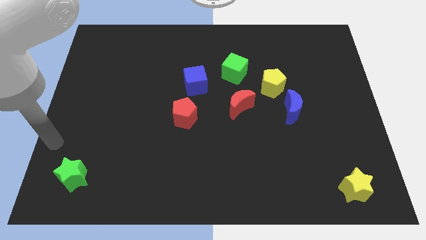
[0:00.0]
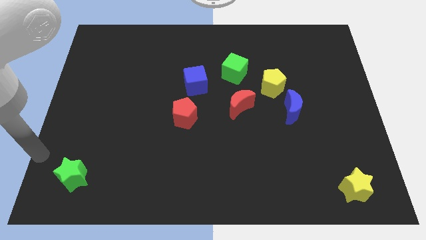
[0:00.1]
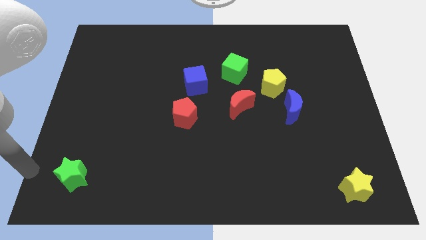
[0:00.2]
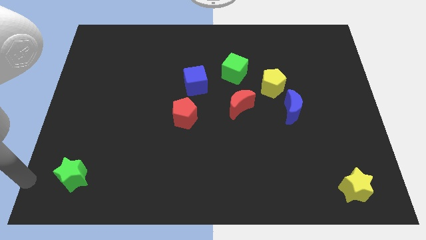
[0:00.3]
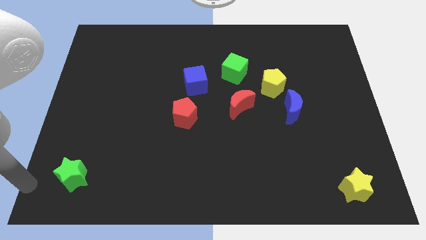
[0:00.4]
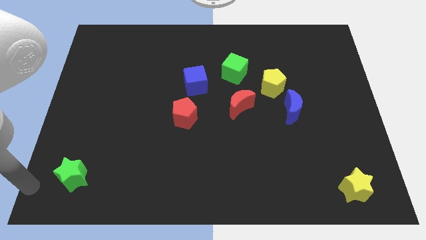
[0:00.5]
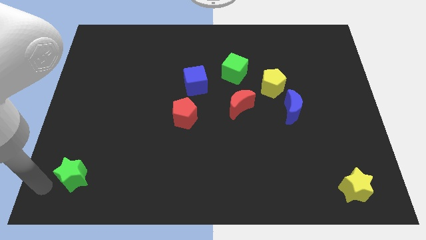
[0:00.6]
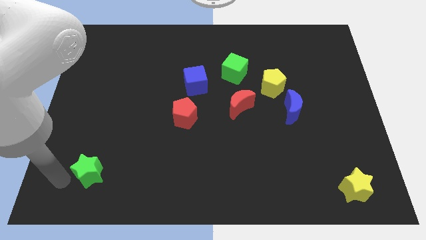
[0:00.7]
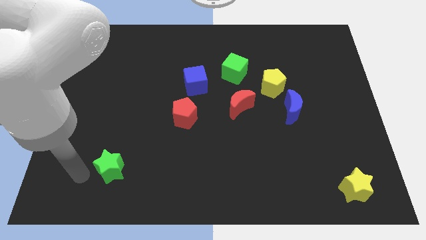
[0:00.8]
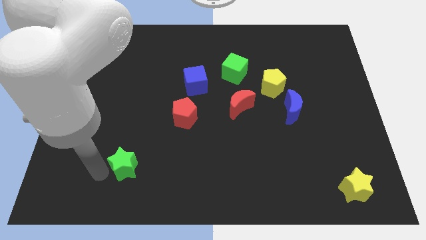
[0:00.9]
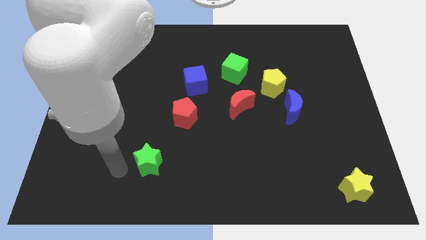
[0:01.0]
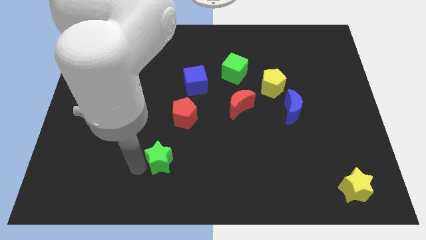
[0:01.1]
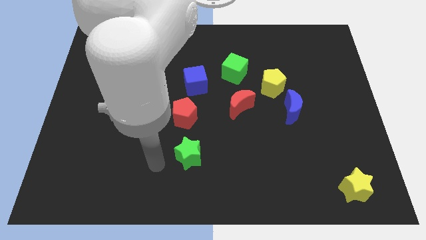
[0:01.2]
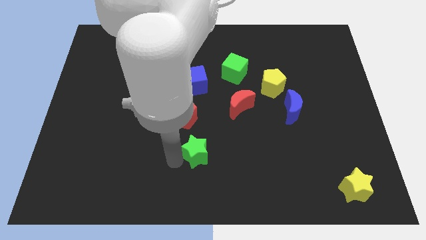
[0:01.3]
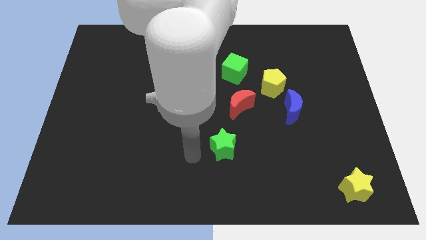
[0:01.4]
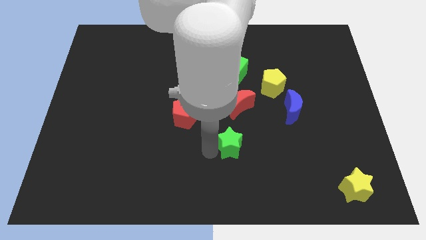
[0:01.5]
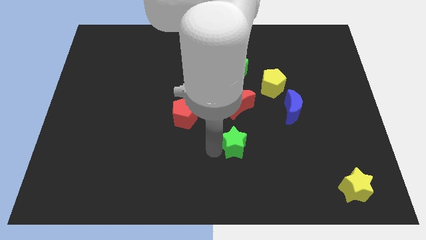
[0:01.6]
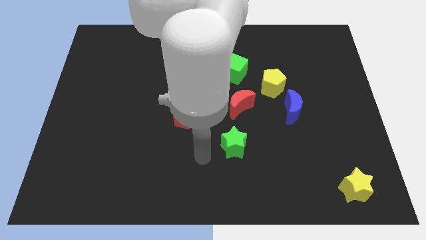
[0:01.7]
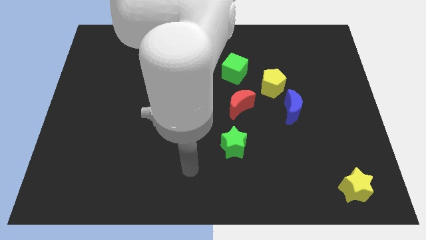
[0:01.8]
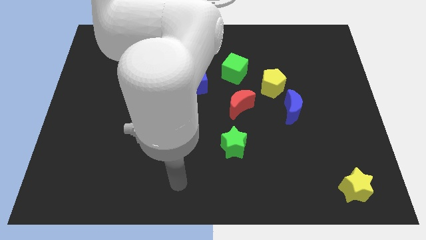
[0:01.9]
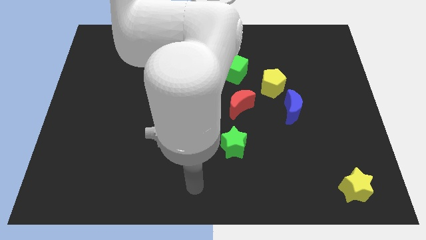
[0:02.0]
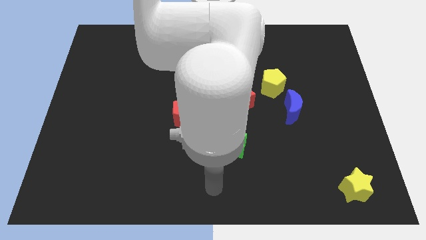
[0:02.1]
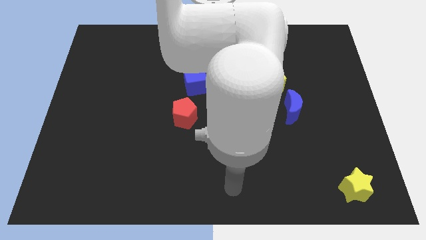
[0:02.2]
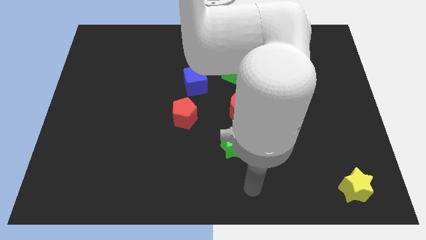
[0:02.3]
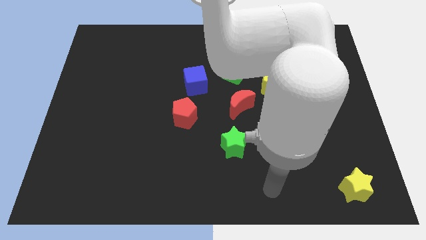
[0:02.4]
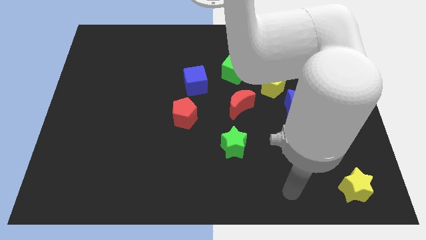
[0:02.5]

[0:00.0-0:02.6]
place the green star below the red crescent

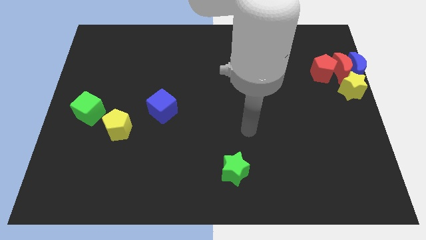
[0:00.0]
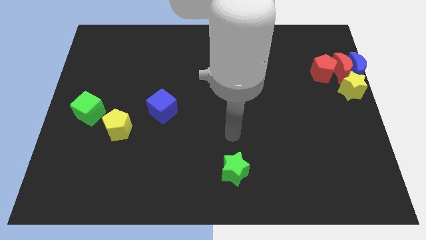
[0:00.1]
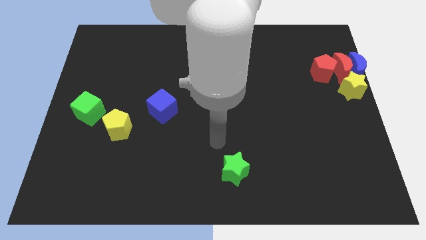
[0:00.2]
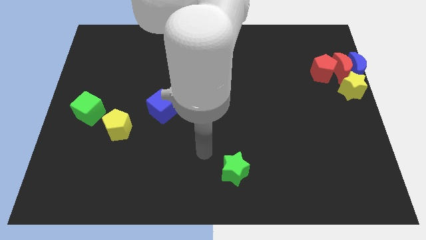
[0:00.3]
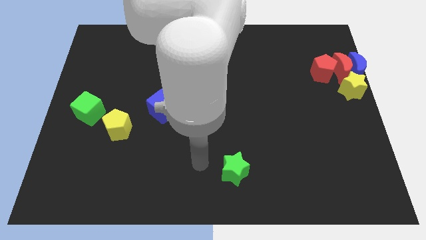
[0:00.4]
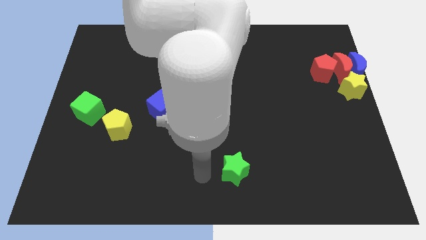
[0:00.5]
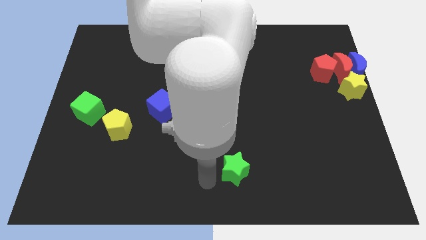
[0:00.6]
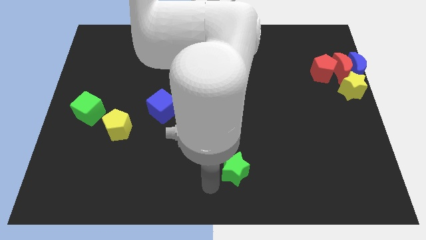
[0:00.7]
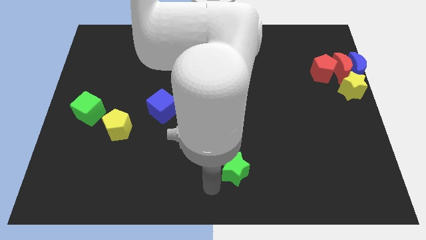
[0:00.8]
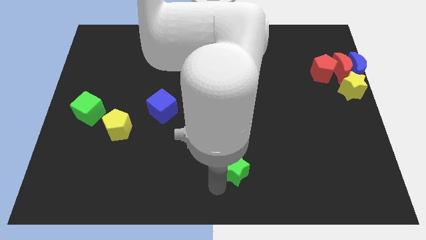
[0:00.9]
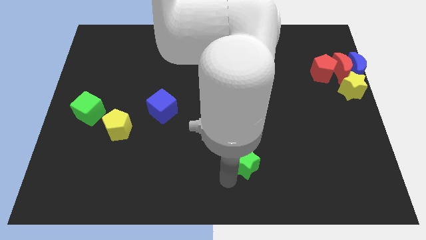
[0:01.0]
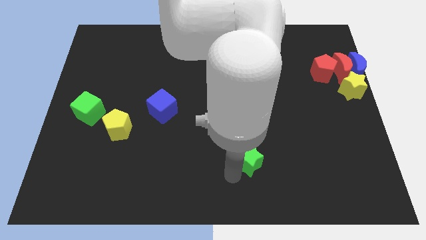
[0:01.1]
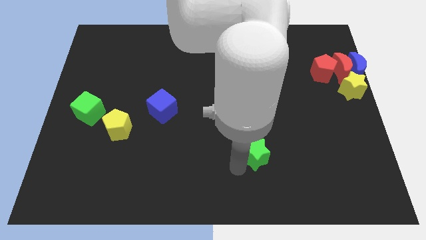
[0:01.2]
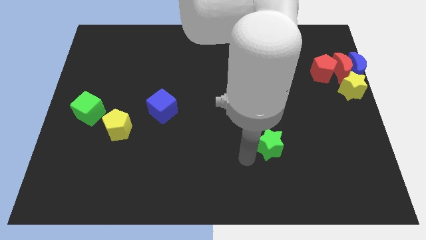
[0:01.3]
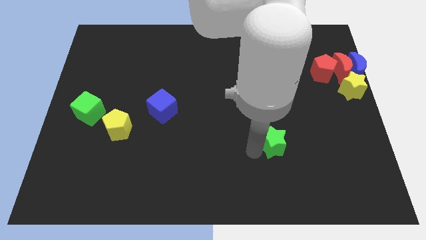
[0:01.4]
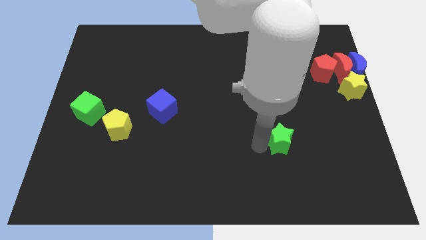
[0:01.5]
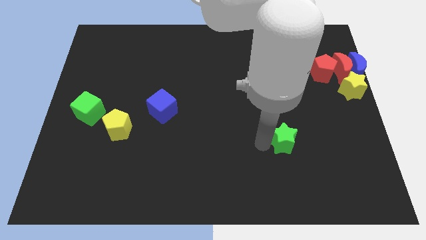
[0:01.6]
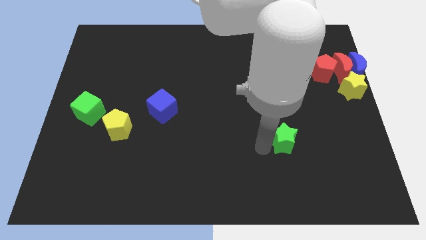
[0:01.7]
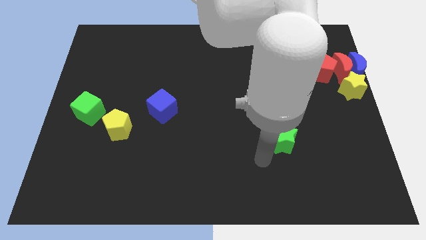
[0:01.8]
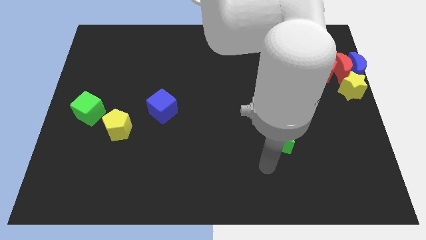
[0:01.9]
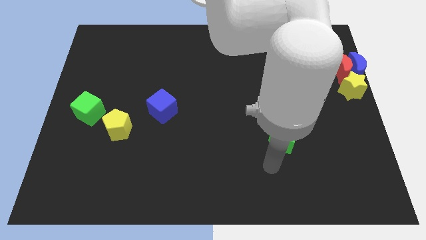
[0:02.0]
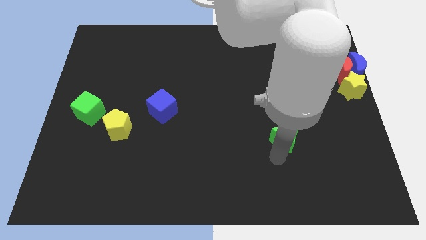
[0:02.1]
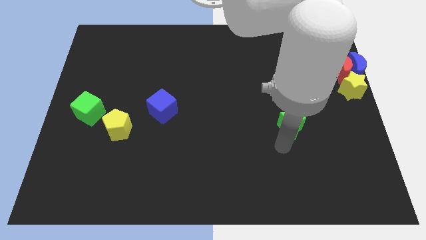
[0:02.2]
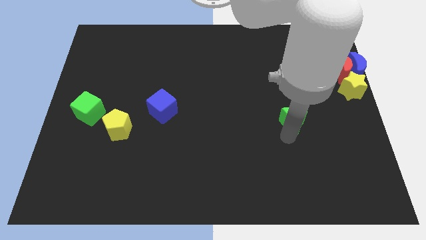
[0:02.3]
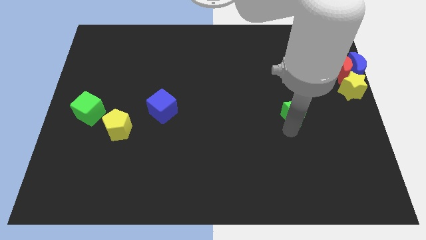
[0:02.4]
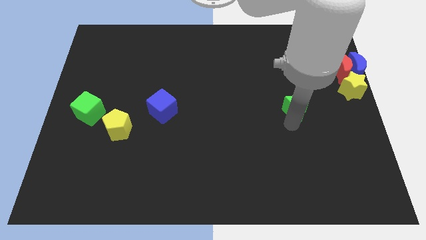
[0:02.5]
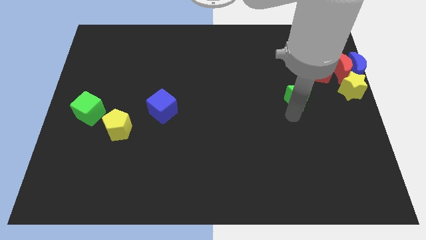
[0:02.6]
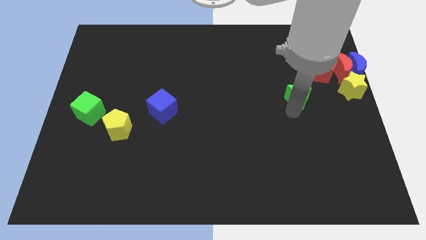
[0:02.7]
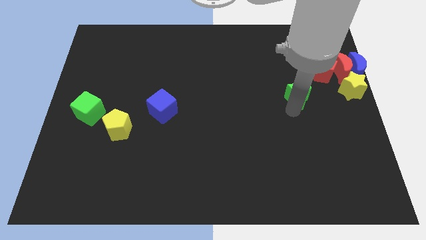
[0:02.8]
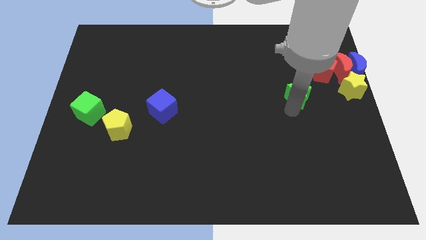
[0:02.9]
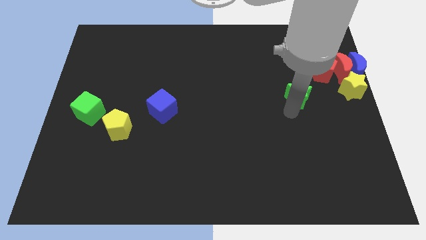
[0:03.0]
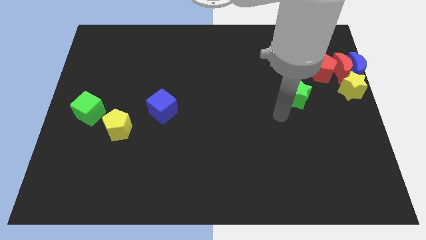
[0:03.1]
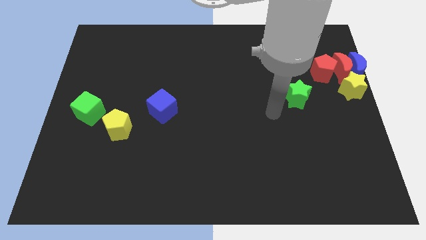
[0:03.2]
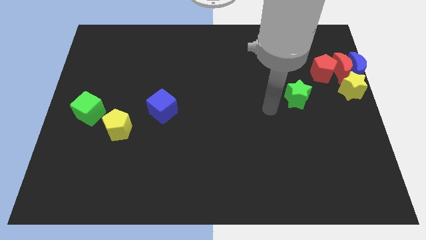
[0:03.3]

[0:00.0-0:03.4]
take the green star towards the red pentagon

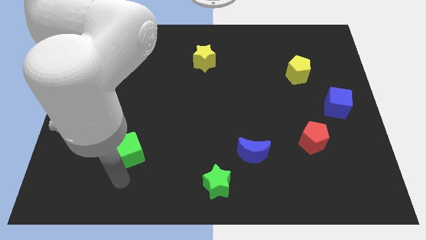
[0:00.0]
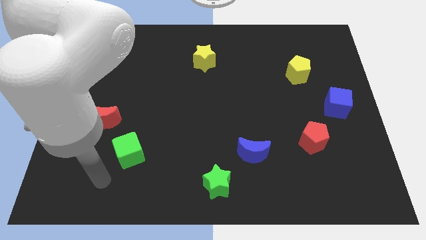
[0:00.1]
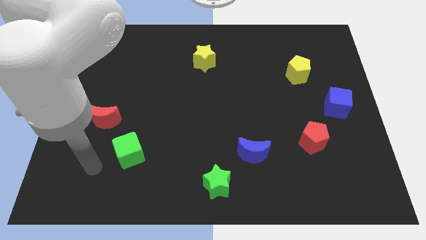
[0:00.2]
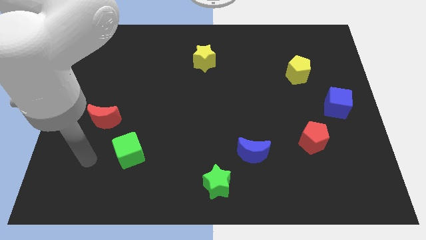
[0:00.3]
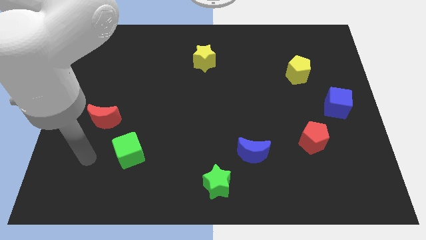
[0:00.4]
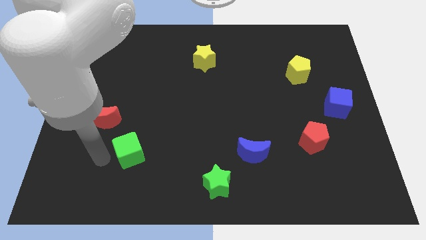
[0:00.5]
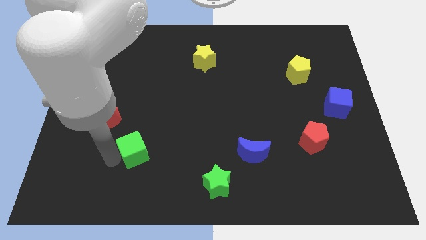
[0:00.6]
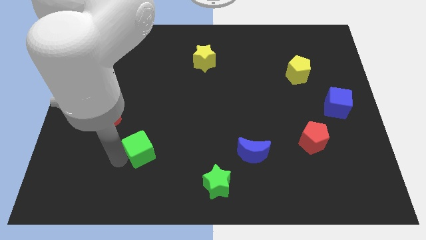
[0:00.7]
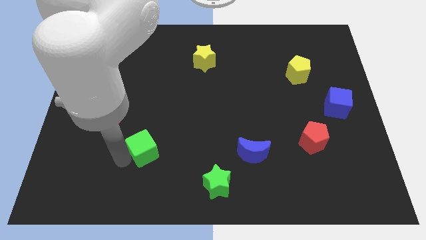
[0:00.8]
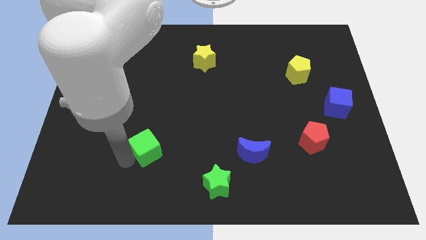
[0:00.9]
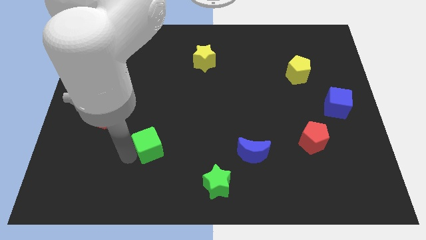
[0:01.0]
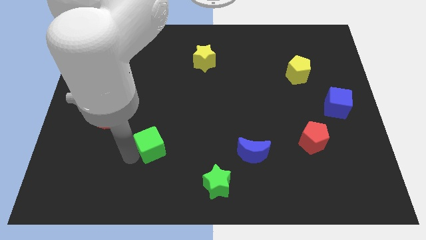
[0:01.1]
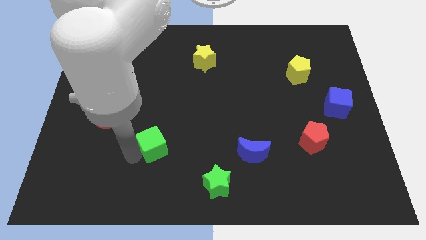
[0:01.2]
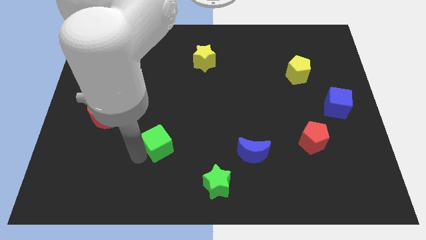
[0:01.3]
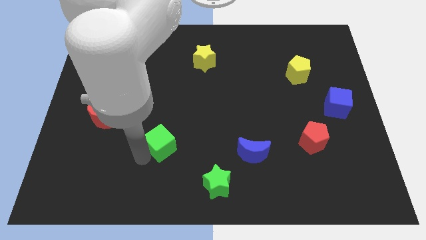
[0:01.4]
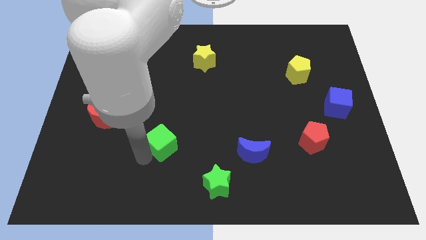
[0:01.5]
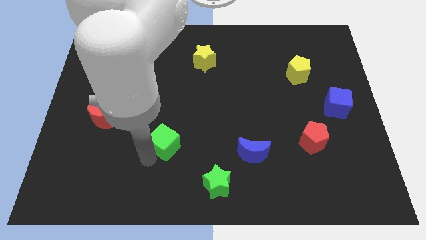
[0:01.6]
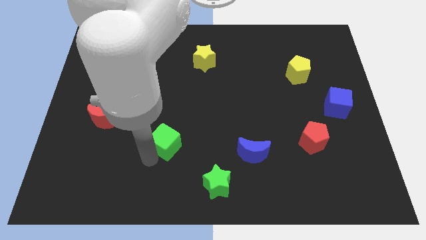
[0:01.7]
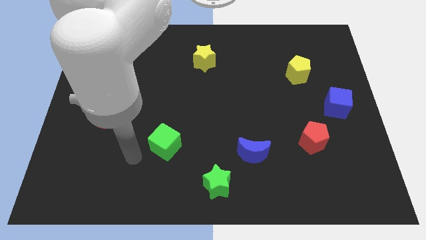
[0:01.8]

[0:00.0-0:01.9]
move the green cube slightly to the right

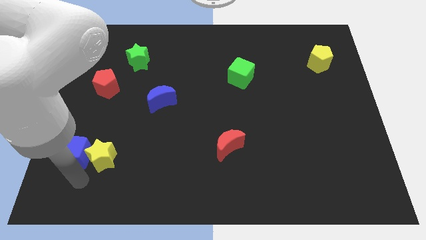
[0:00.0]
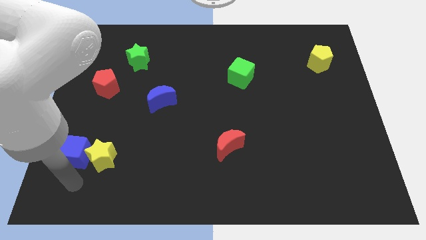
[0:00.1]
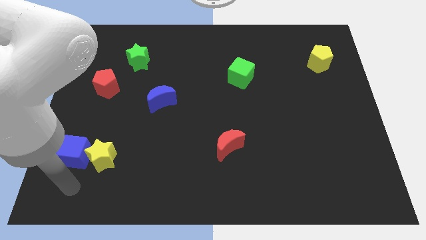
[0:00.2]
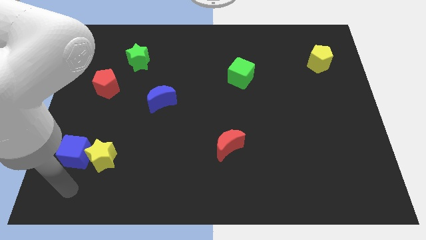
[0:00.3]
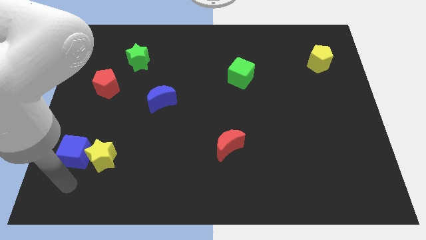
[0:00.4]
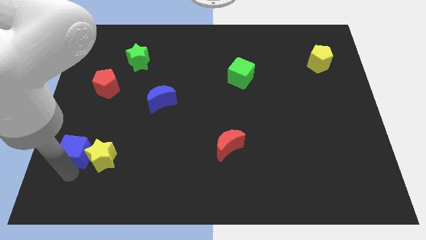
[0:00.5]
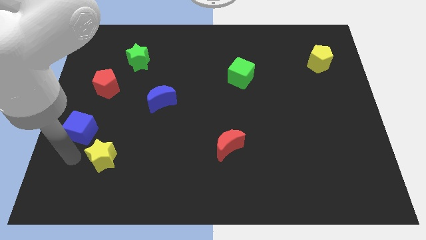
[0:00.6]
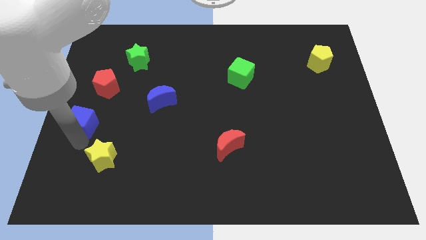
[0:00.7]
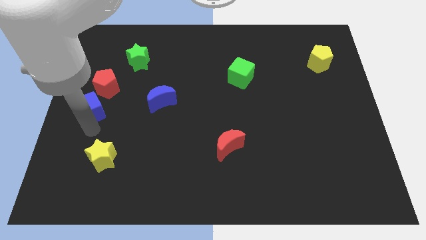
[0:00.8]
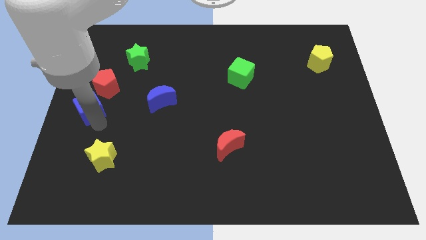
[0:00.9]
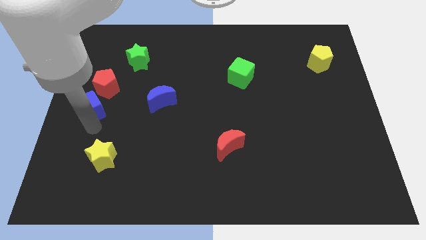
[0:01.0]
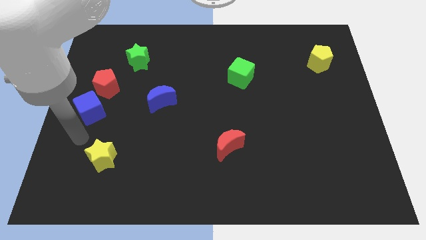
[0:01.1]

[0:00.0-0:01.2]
separate blue cube from yellow star
